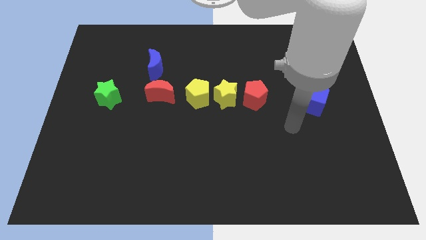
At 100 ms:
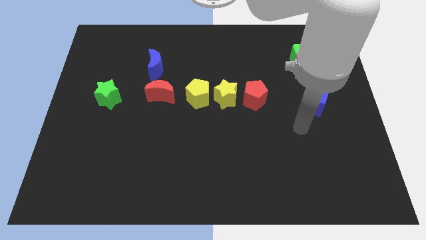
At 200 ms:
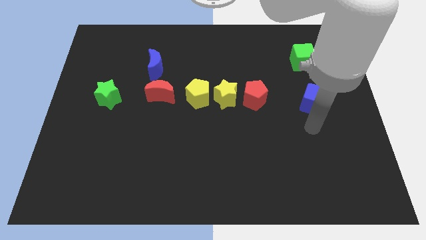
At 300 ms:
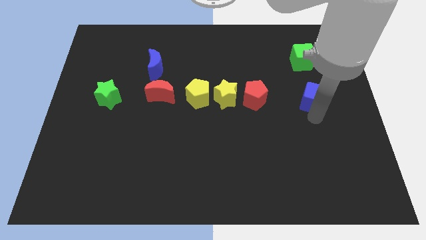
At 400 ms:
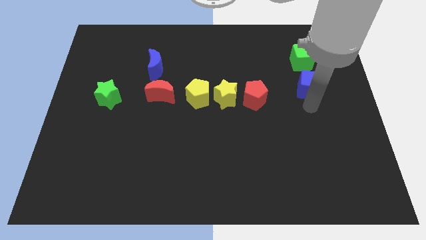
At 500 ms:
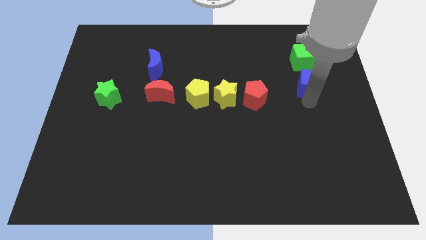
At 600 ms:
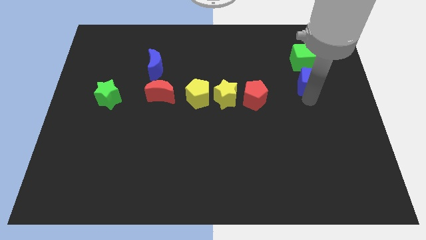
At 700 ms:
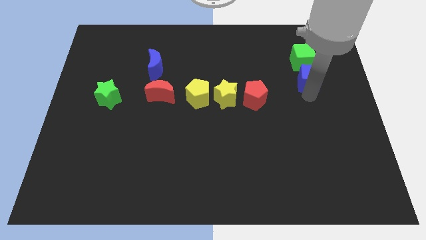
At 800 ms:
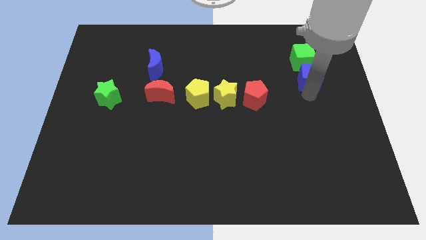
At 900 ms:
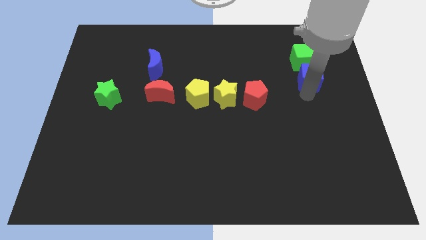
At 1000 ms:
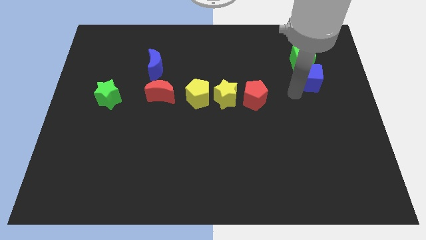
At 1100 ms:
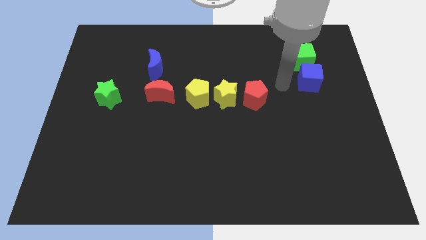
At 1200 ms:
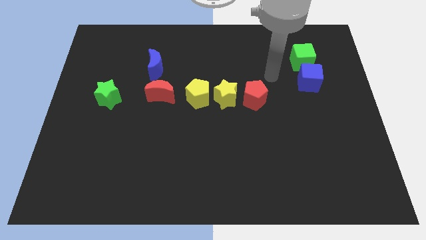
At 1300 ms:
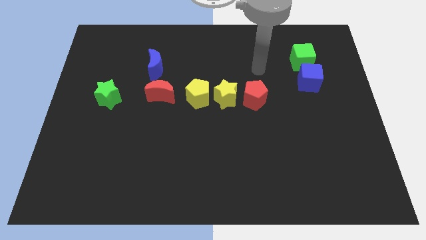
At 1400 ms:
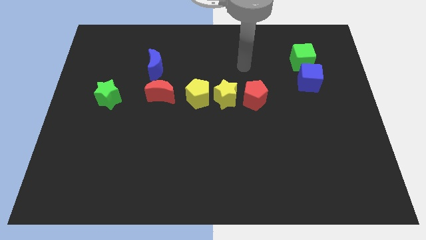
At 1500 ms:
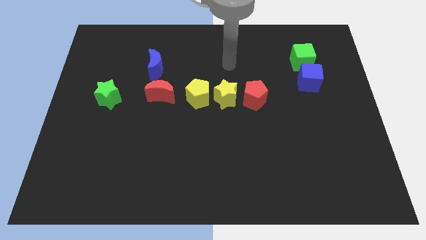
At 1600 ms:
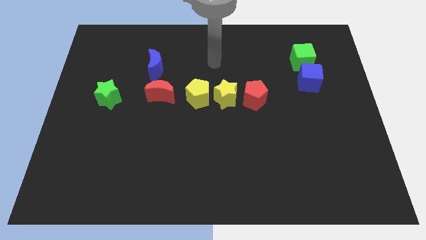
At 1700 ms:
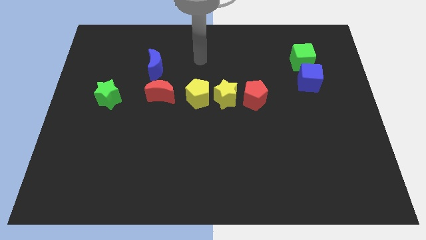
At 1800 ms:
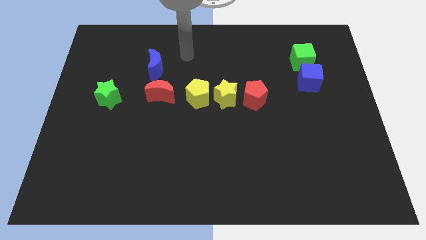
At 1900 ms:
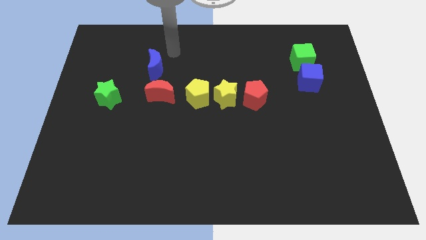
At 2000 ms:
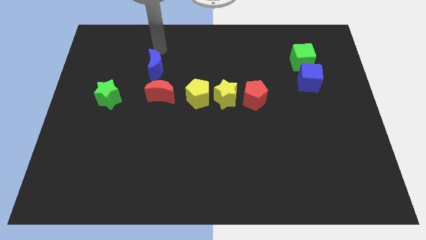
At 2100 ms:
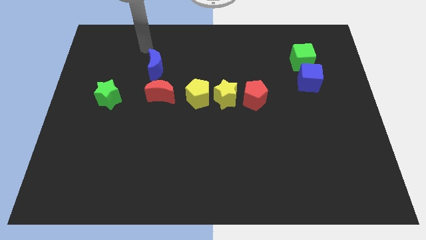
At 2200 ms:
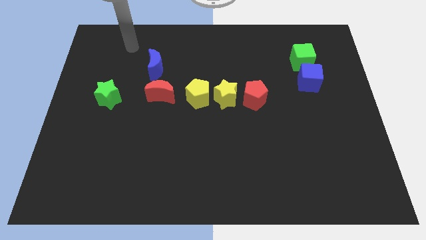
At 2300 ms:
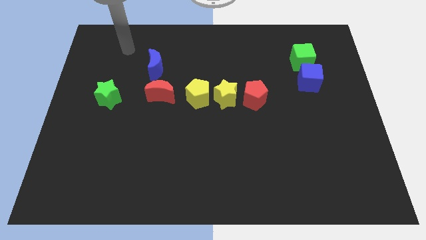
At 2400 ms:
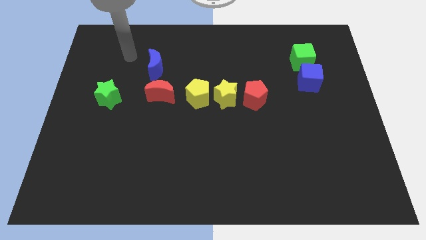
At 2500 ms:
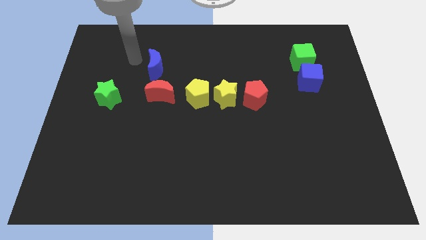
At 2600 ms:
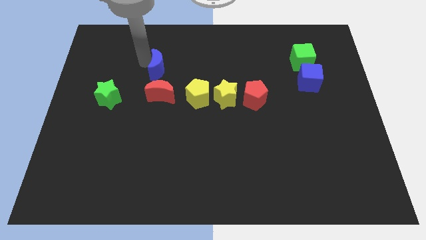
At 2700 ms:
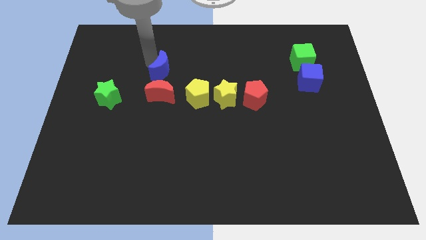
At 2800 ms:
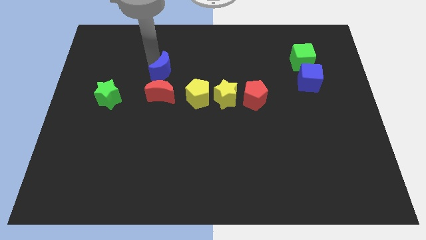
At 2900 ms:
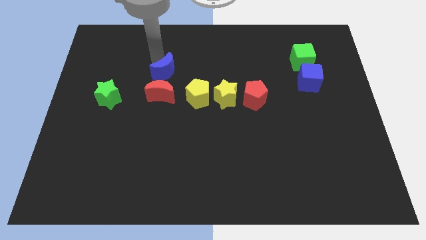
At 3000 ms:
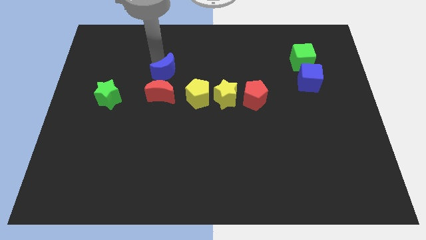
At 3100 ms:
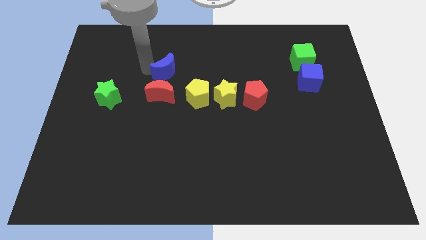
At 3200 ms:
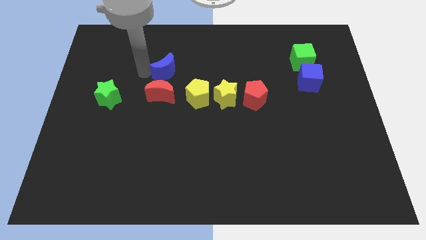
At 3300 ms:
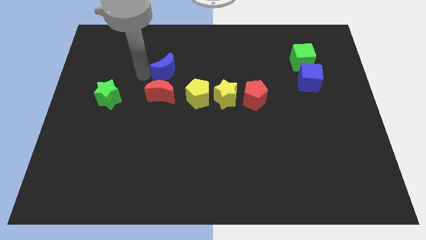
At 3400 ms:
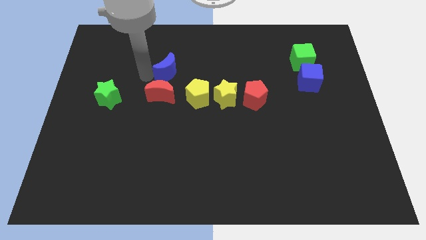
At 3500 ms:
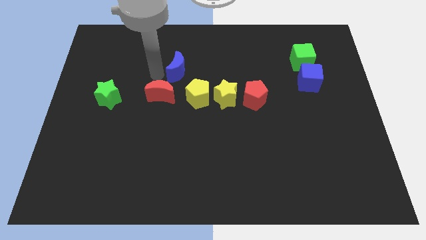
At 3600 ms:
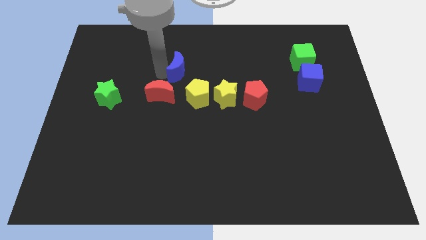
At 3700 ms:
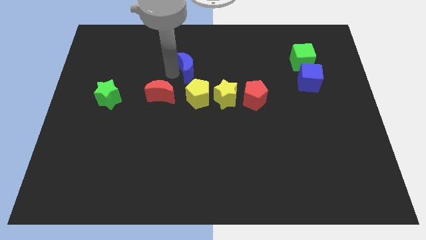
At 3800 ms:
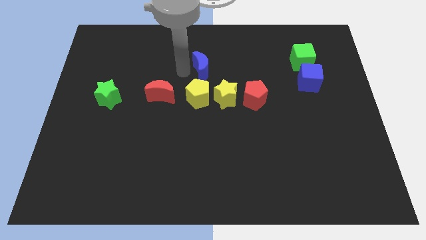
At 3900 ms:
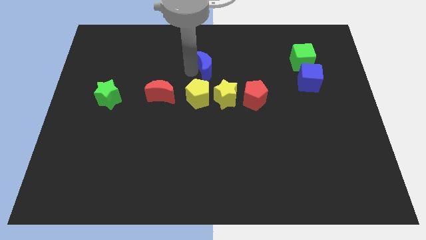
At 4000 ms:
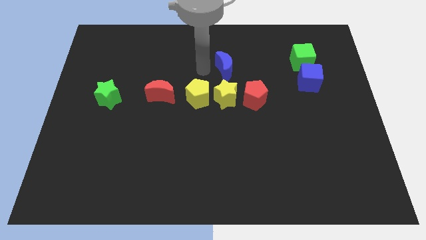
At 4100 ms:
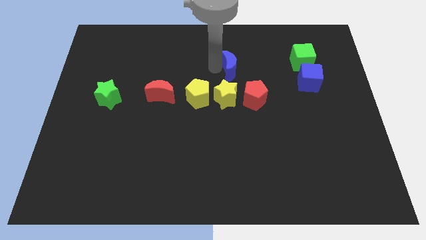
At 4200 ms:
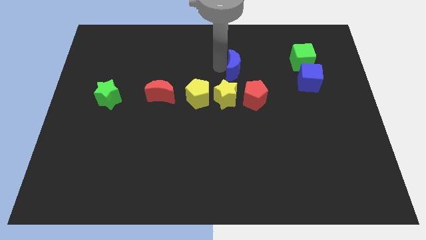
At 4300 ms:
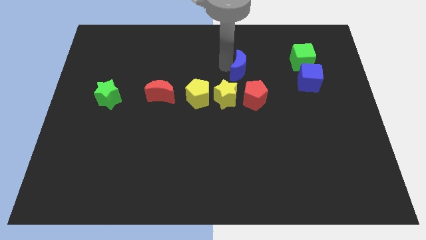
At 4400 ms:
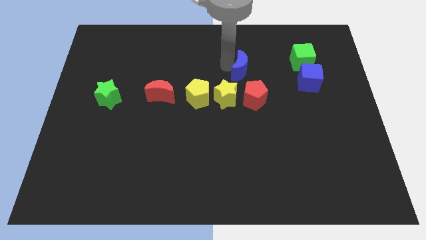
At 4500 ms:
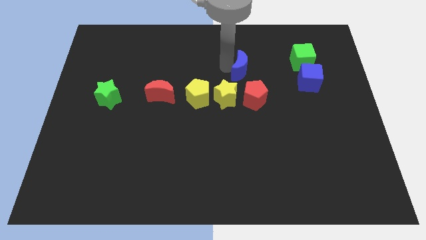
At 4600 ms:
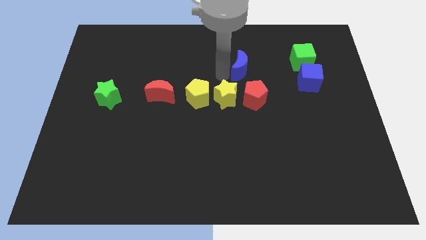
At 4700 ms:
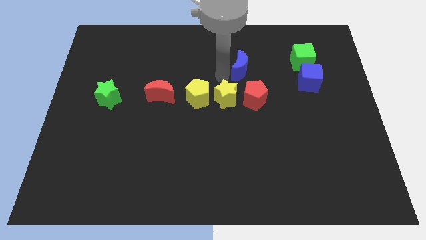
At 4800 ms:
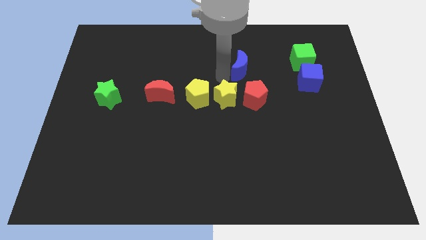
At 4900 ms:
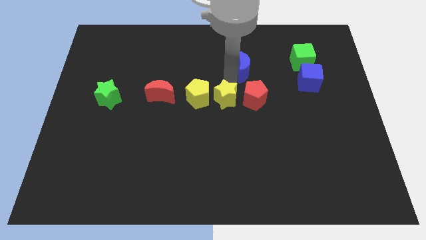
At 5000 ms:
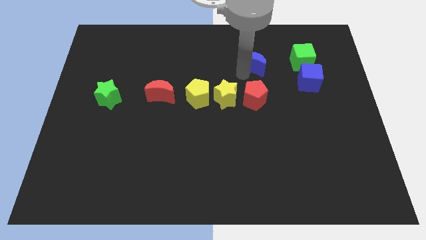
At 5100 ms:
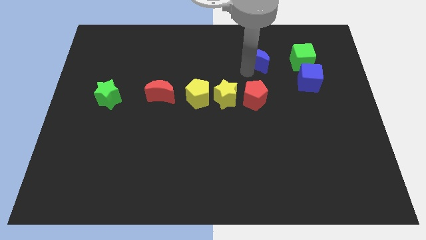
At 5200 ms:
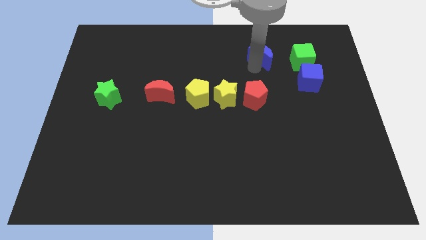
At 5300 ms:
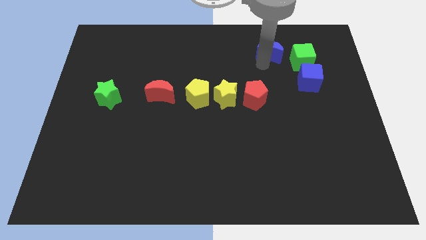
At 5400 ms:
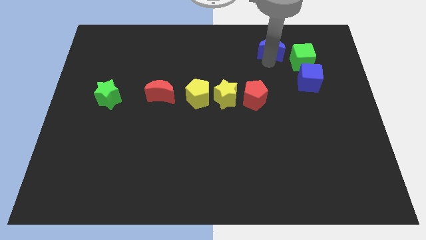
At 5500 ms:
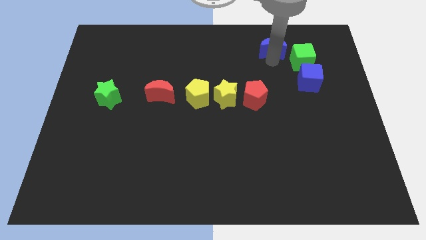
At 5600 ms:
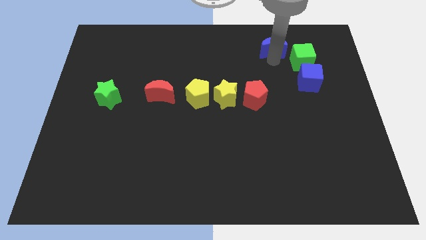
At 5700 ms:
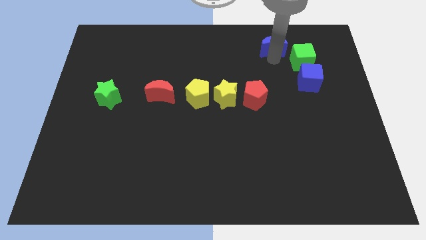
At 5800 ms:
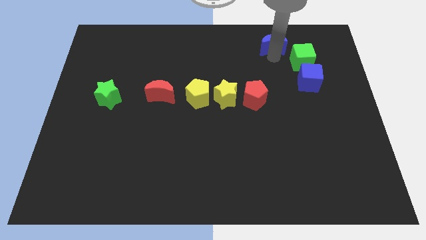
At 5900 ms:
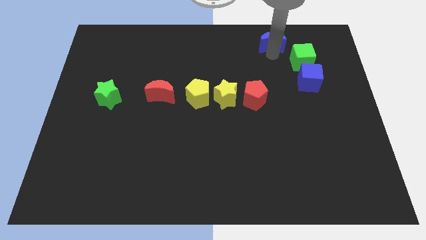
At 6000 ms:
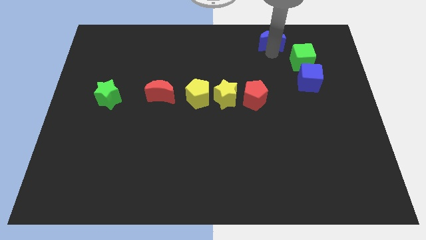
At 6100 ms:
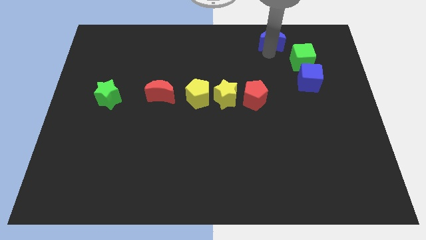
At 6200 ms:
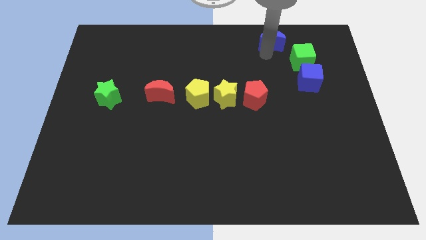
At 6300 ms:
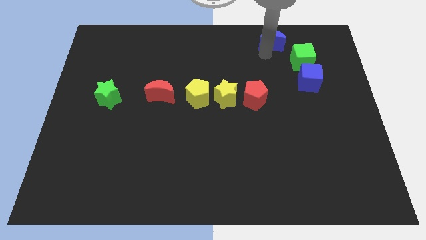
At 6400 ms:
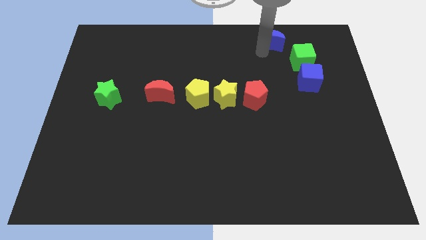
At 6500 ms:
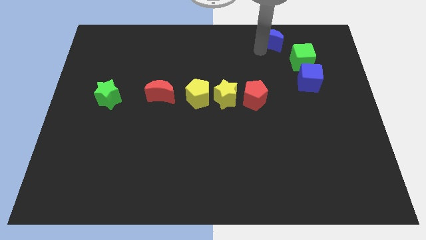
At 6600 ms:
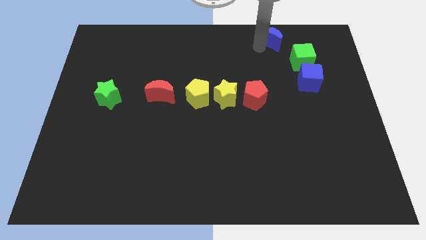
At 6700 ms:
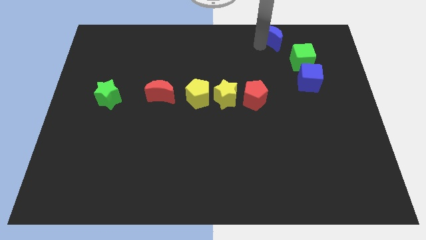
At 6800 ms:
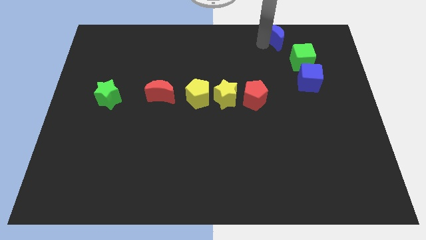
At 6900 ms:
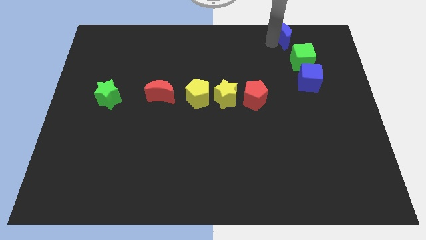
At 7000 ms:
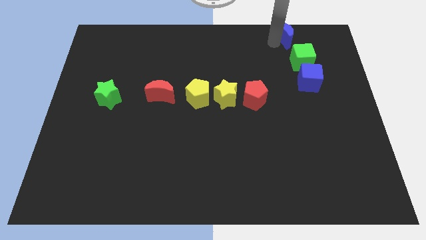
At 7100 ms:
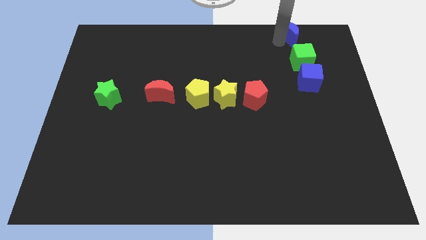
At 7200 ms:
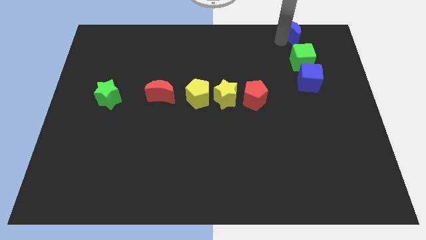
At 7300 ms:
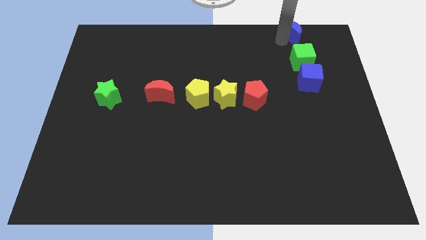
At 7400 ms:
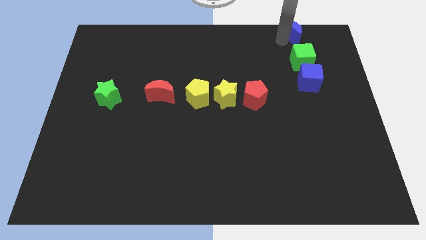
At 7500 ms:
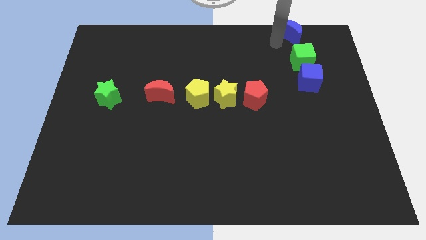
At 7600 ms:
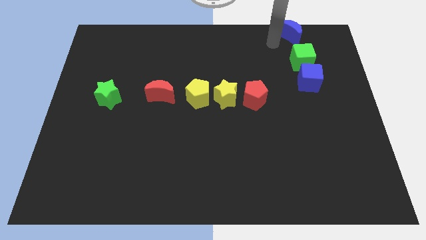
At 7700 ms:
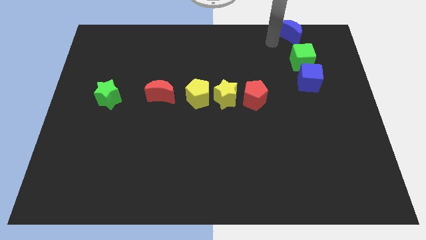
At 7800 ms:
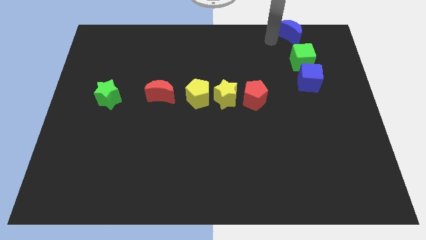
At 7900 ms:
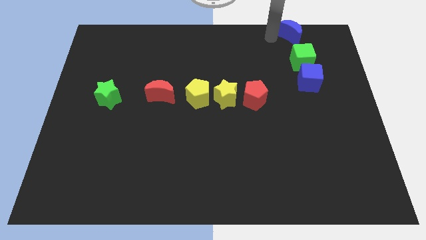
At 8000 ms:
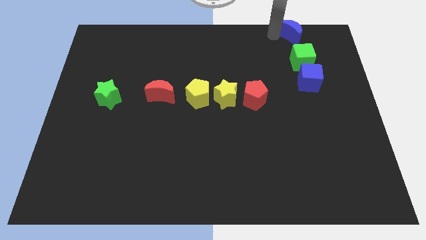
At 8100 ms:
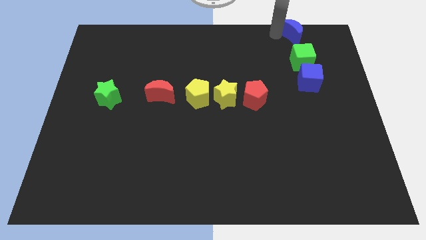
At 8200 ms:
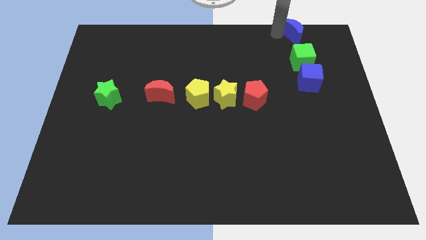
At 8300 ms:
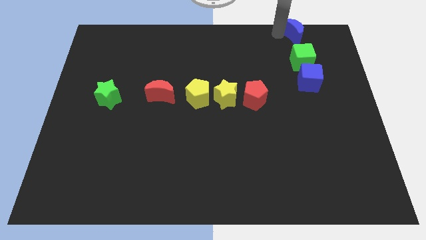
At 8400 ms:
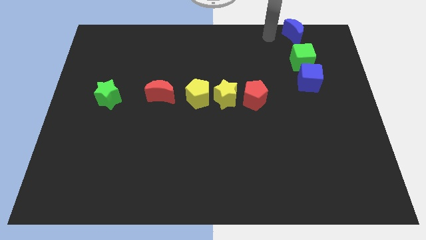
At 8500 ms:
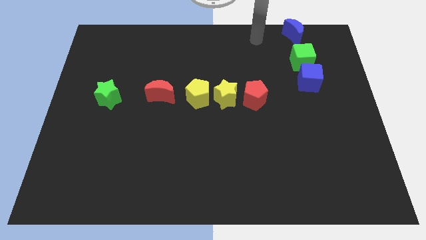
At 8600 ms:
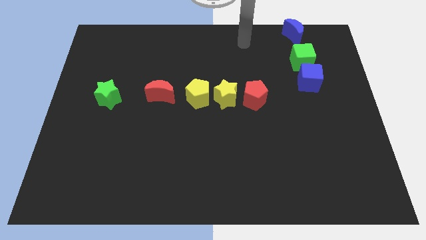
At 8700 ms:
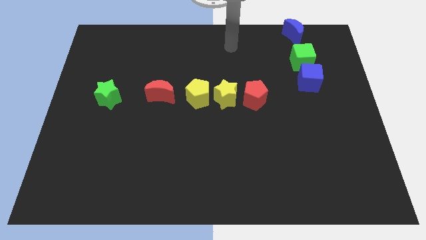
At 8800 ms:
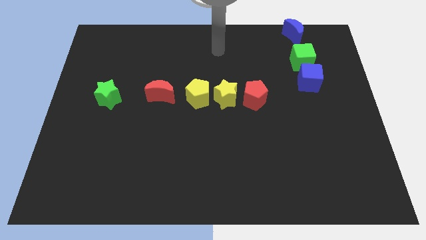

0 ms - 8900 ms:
put the blue crescent green cube and the blue cube in a line vertically

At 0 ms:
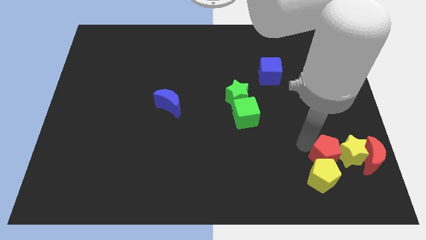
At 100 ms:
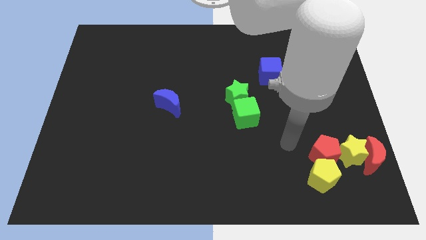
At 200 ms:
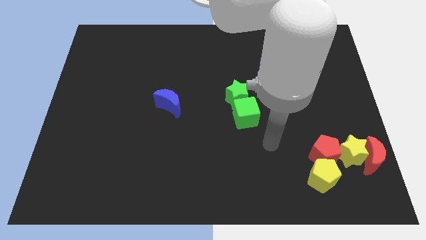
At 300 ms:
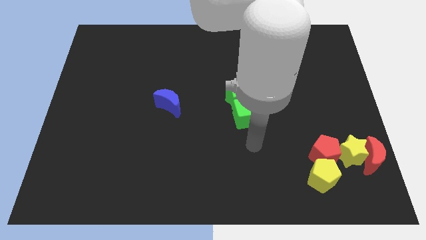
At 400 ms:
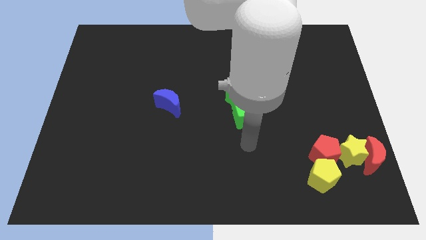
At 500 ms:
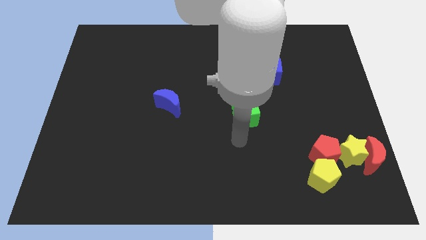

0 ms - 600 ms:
move your arm below the green cube
